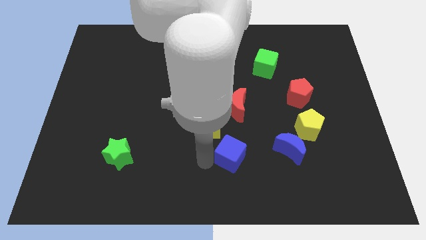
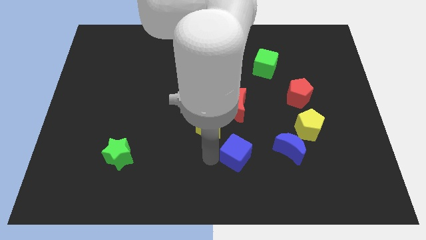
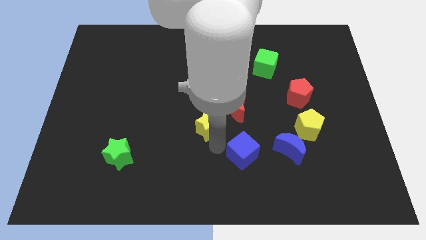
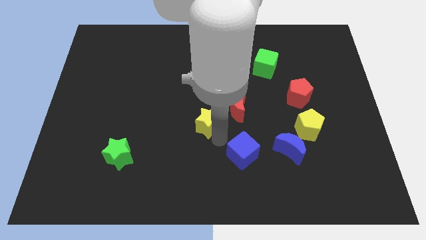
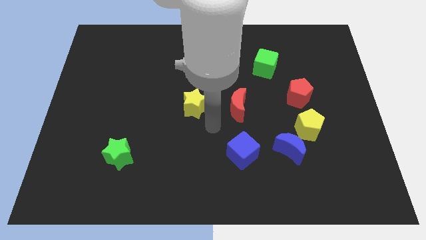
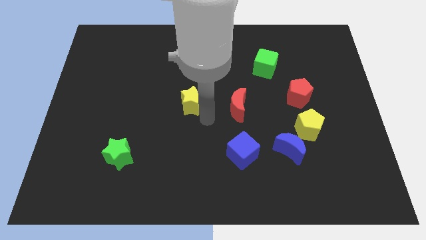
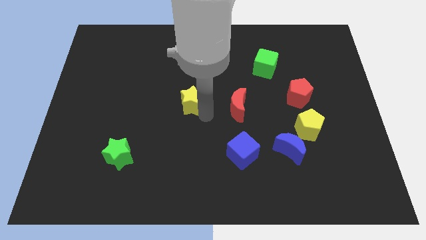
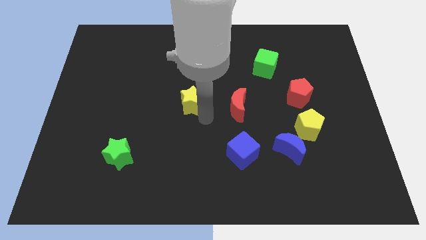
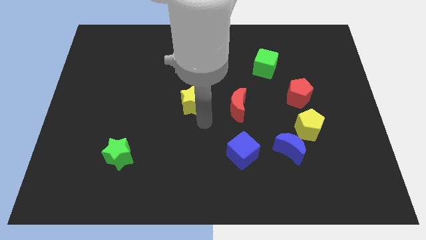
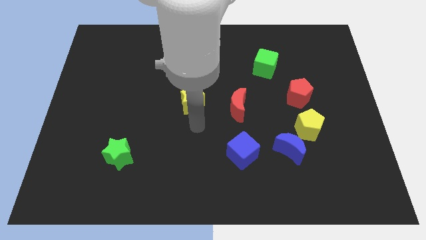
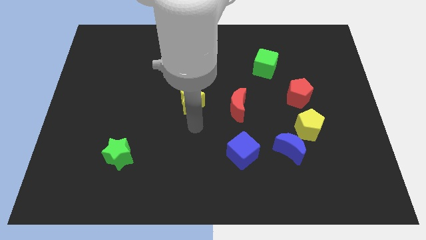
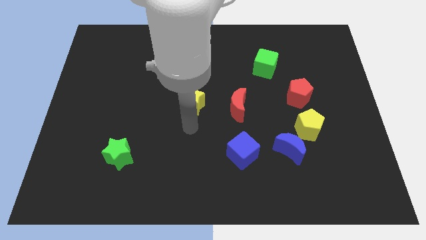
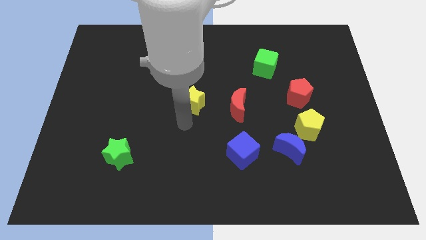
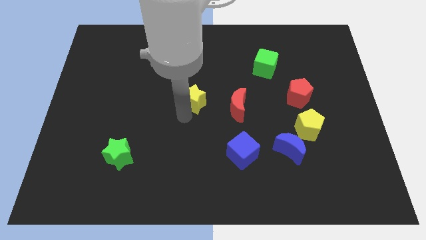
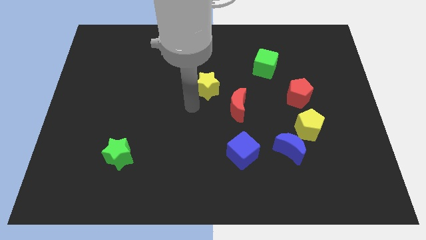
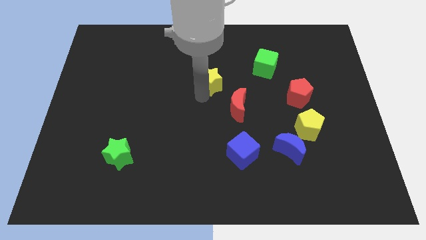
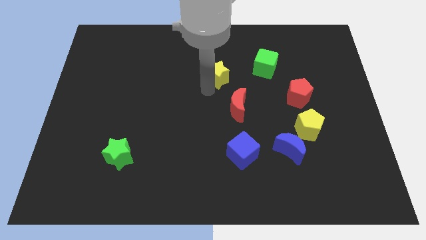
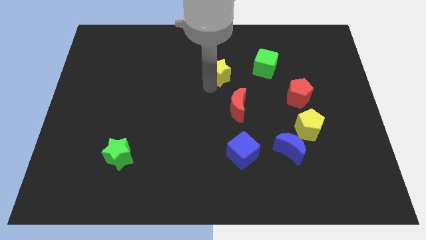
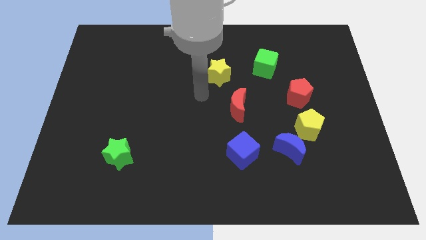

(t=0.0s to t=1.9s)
place the yellow star at the top left of the red moon

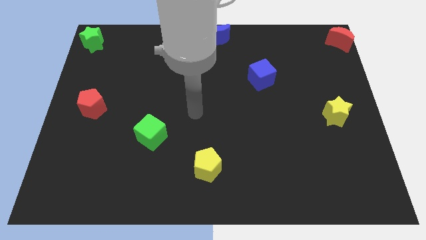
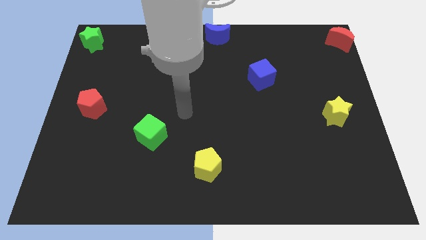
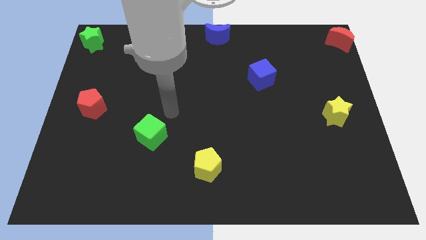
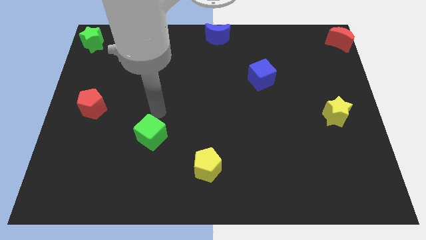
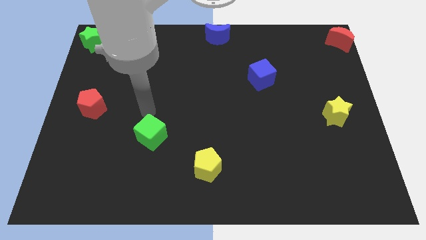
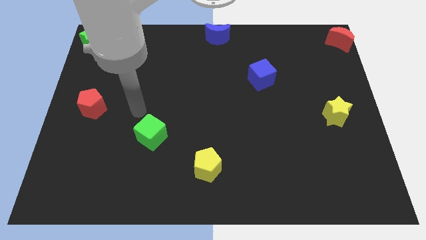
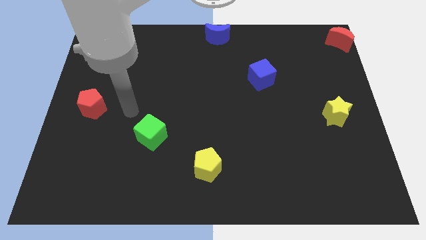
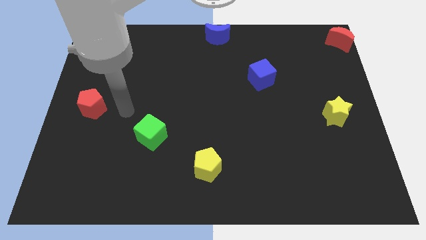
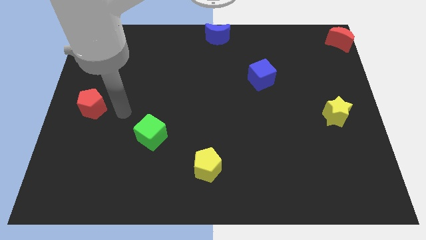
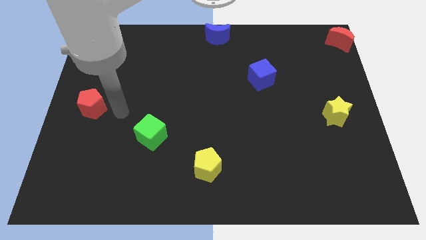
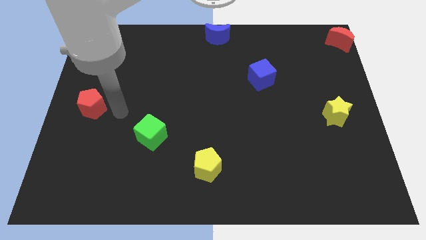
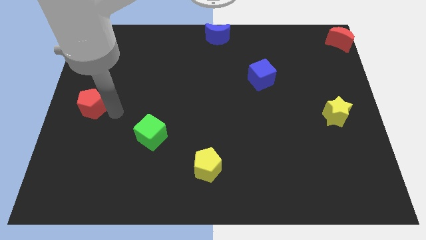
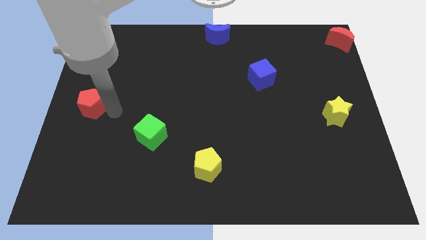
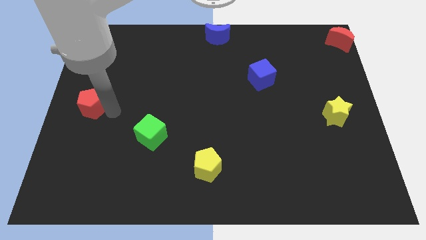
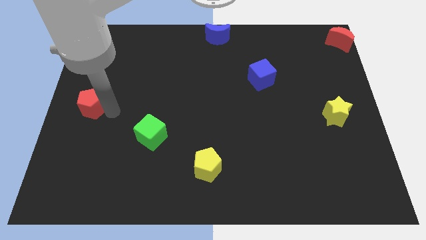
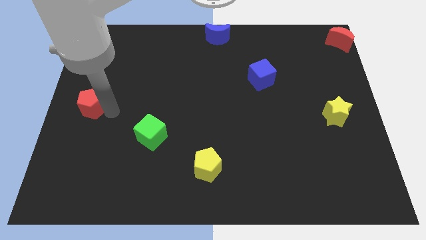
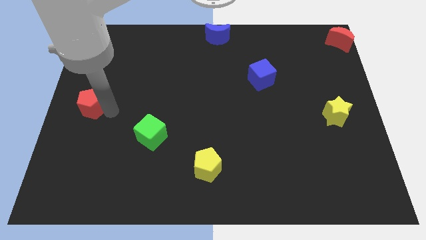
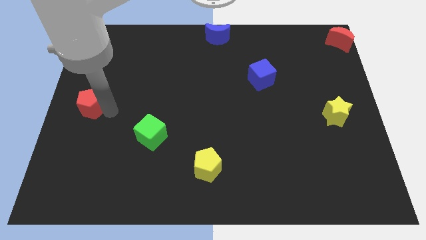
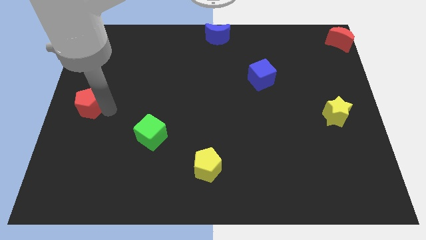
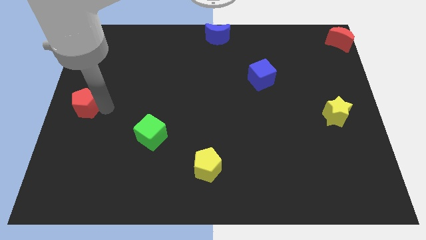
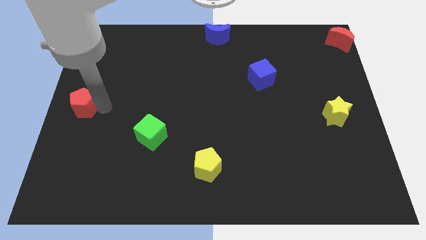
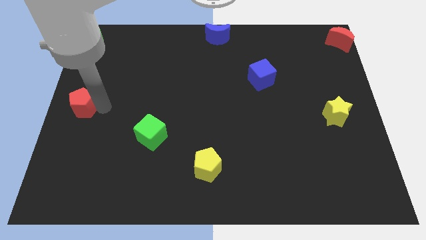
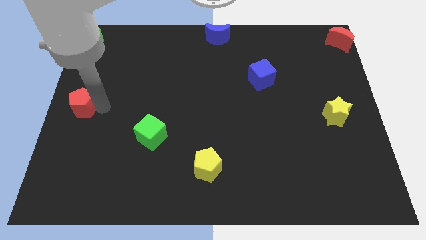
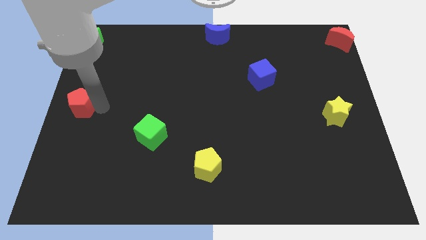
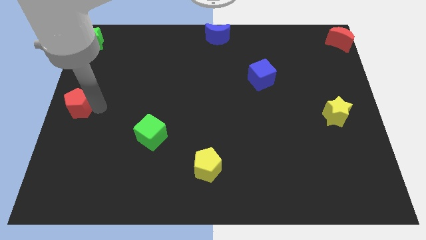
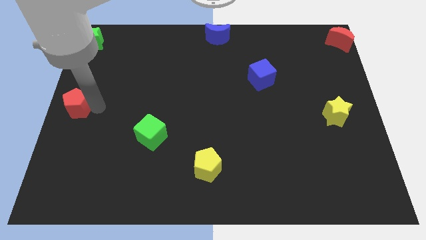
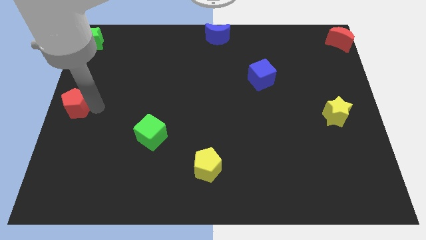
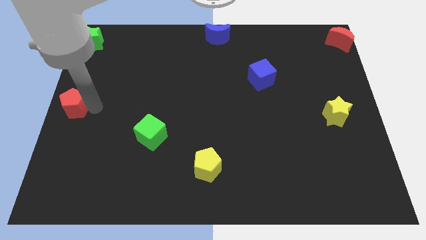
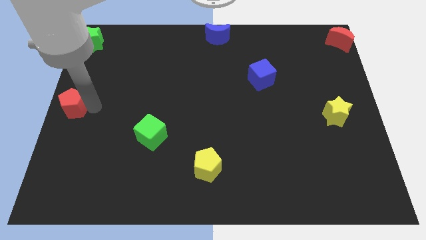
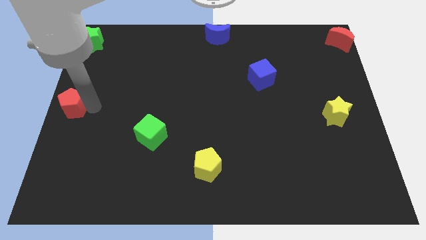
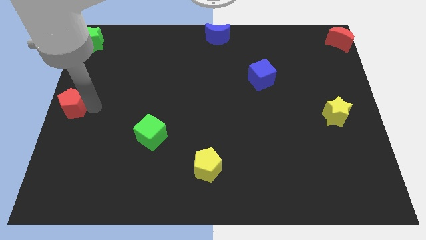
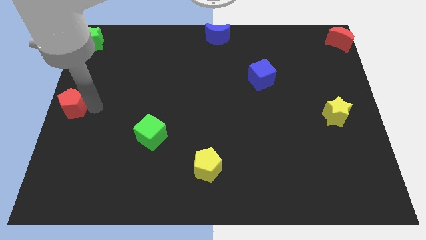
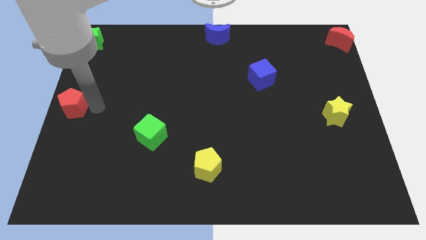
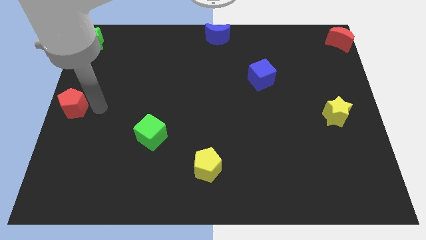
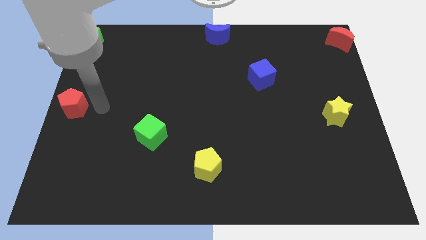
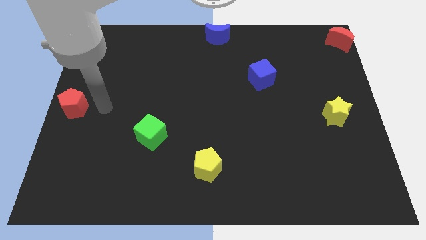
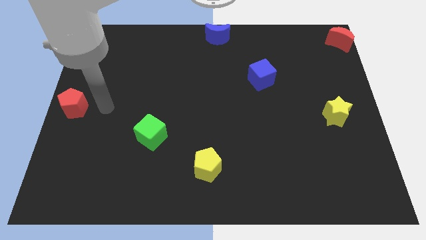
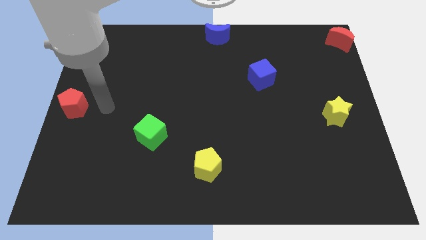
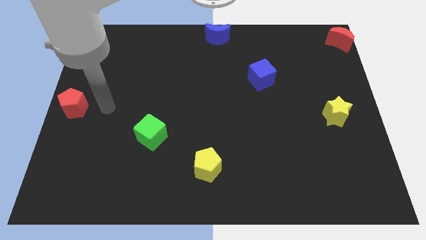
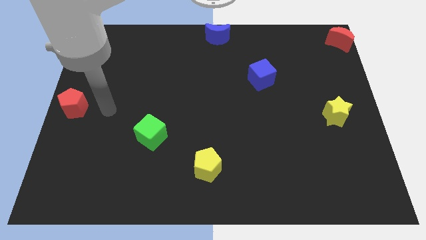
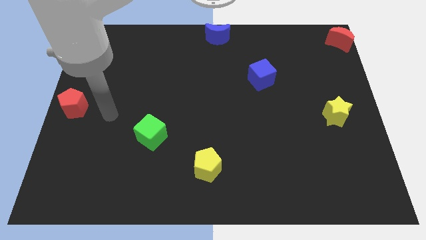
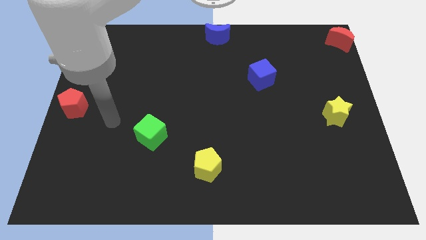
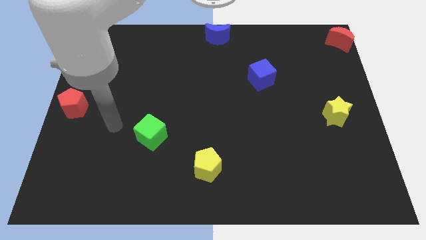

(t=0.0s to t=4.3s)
move the red pentagon to the center left of the board

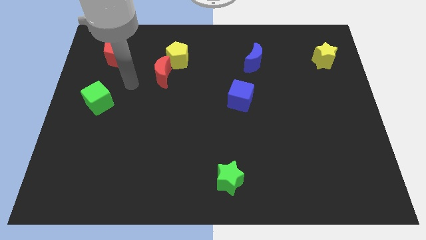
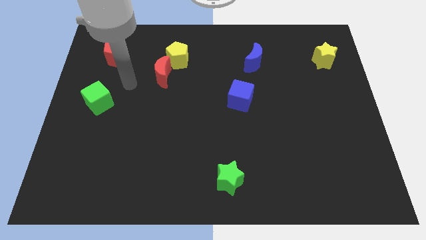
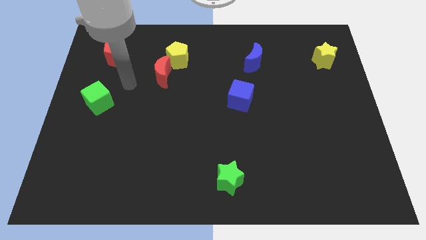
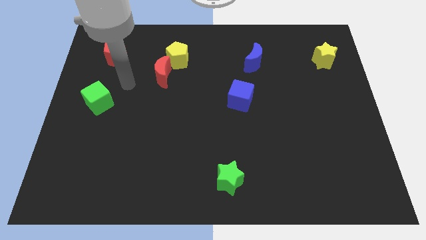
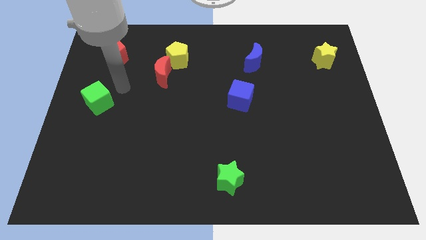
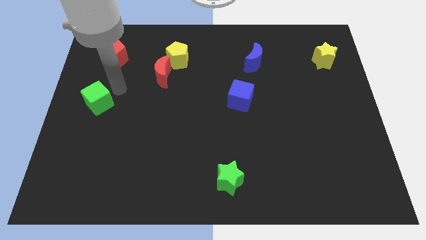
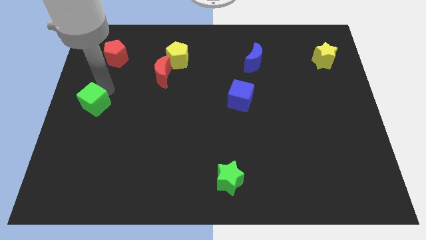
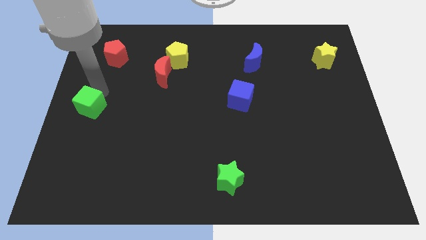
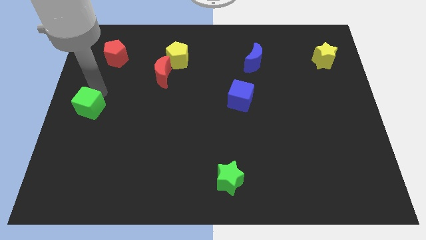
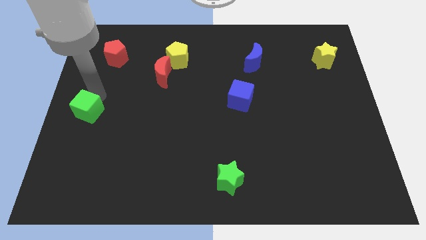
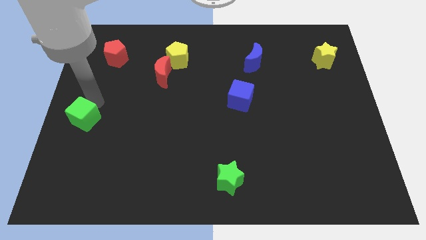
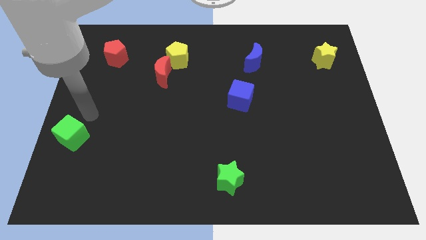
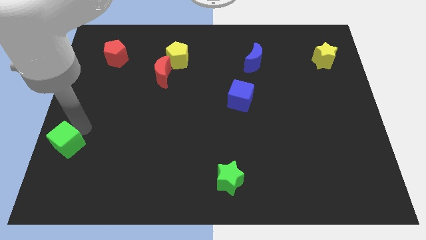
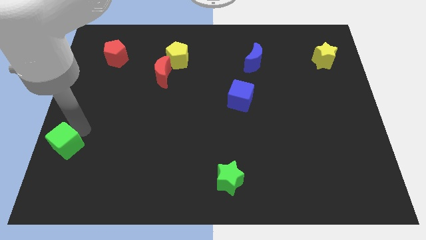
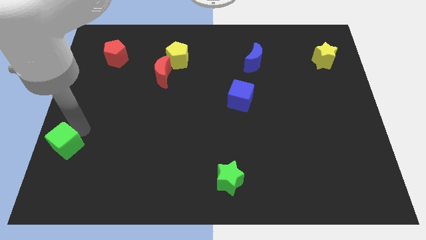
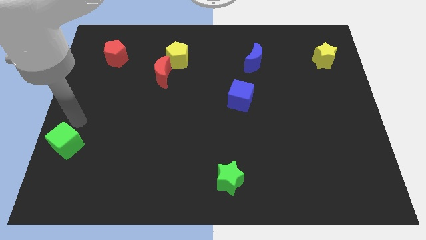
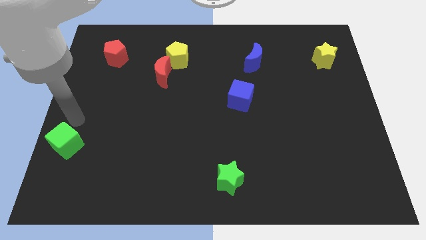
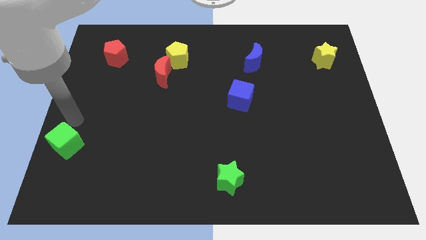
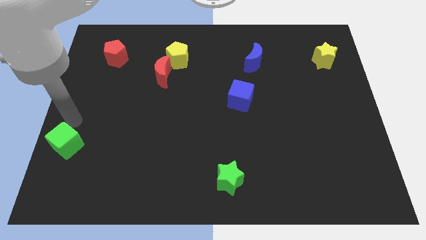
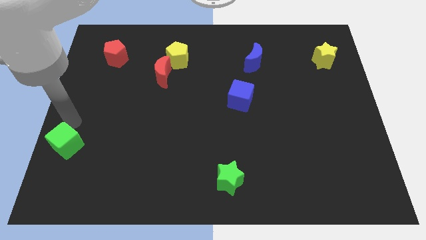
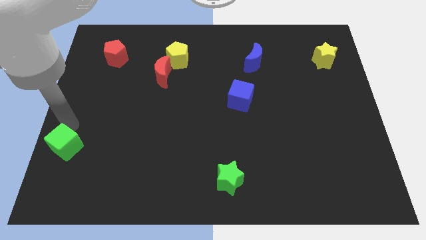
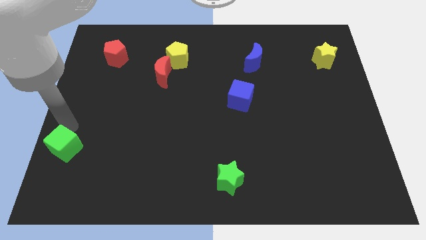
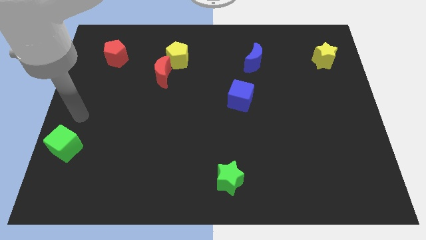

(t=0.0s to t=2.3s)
move the green cube towards the left center of board

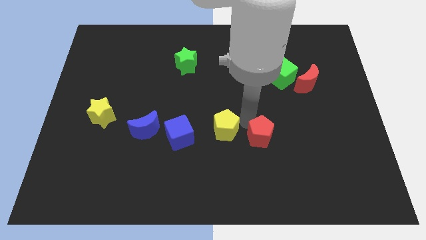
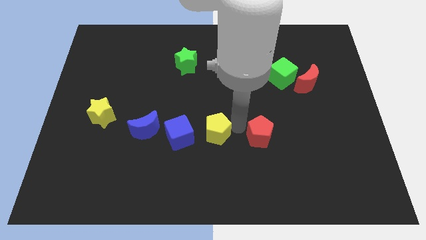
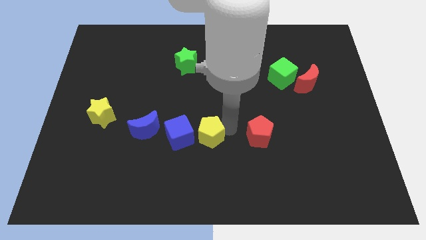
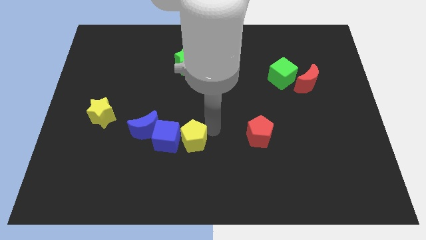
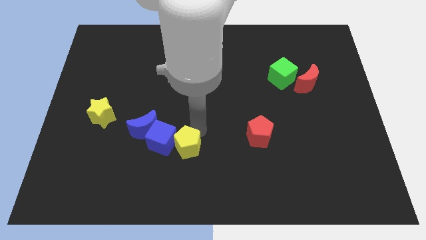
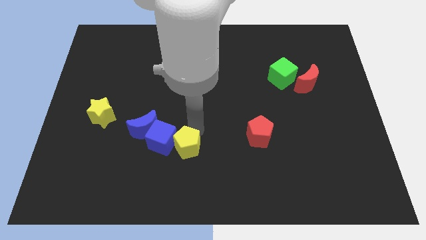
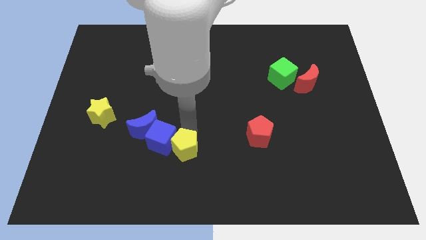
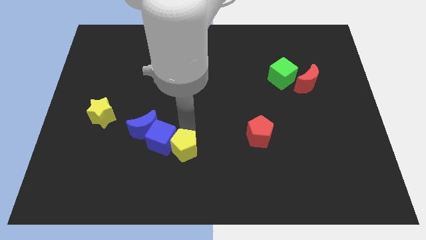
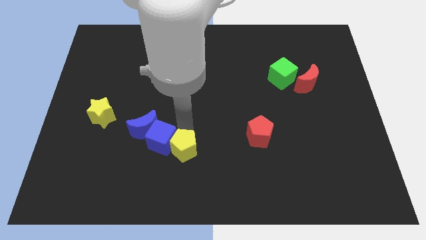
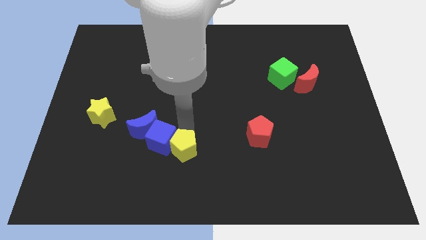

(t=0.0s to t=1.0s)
push yellow pentagon close to blue cube
